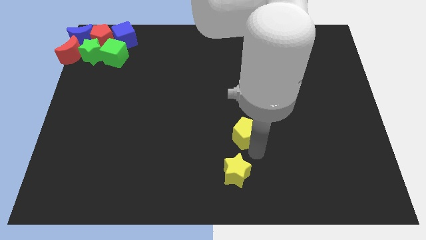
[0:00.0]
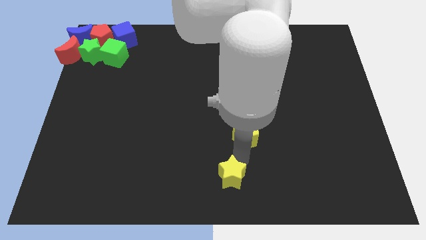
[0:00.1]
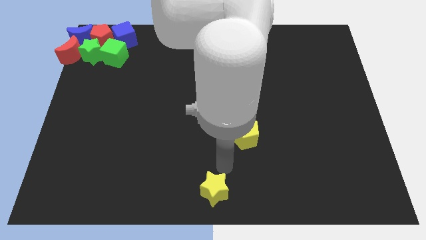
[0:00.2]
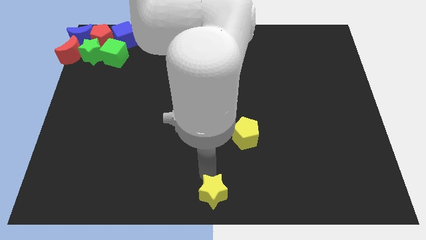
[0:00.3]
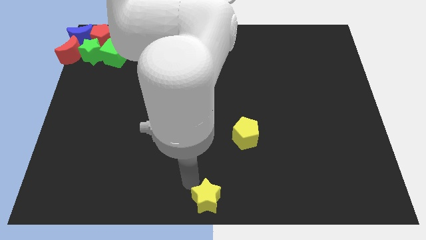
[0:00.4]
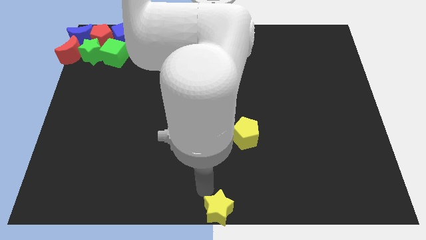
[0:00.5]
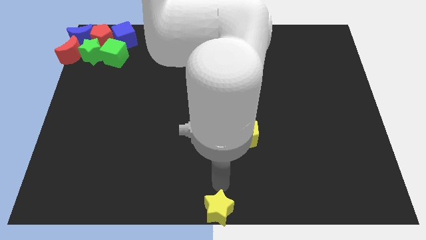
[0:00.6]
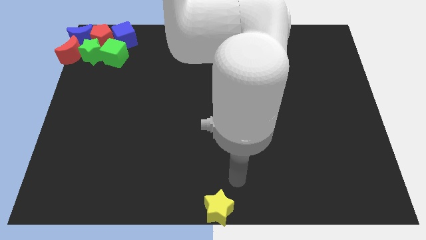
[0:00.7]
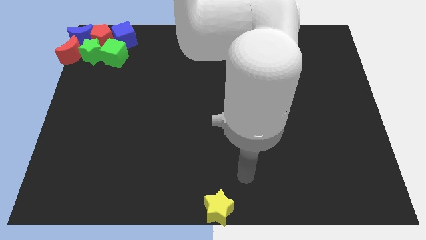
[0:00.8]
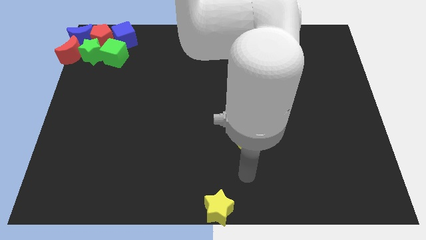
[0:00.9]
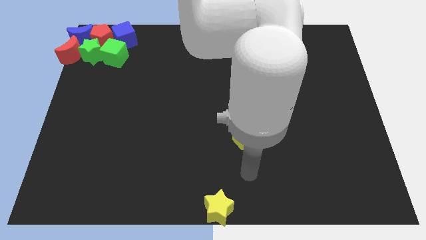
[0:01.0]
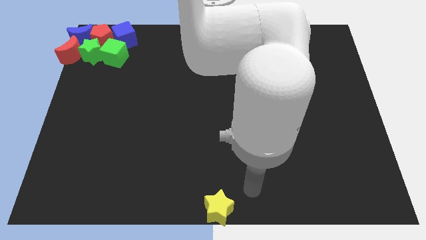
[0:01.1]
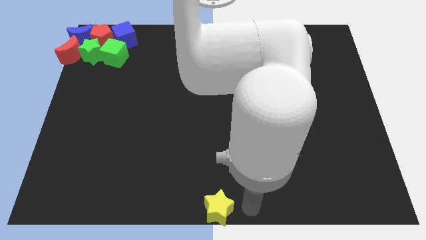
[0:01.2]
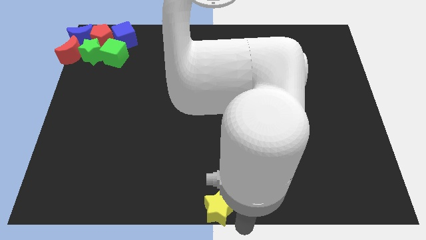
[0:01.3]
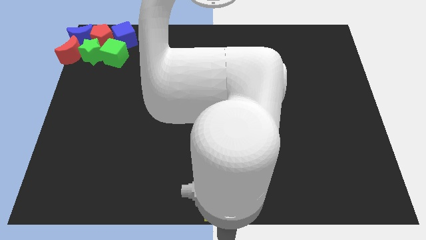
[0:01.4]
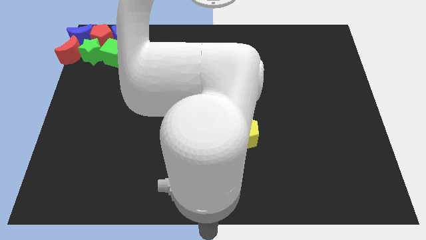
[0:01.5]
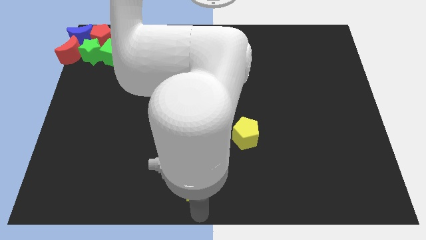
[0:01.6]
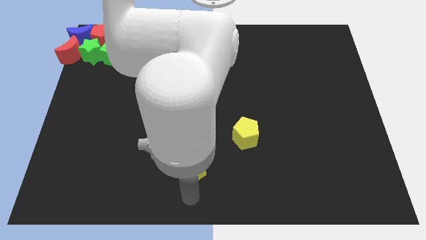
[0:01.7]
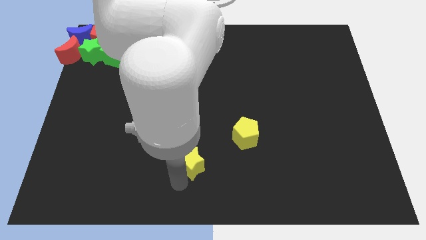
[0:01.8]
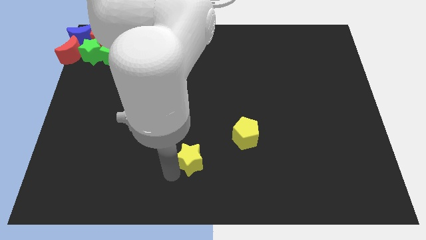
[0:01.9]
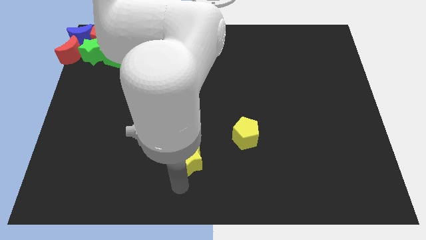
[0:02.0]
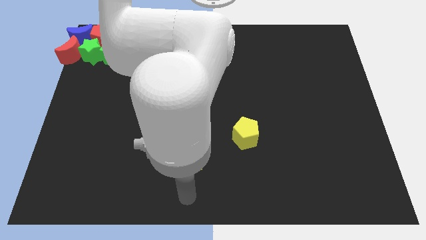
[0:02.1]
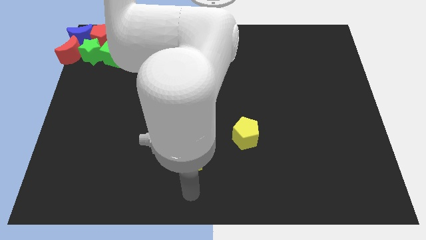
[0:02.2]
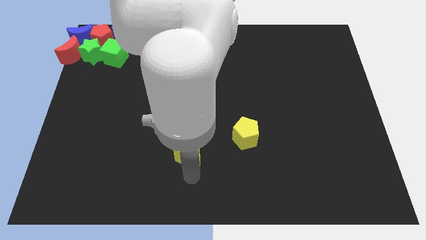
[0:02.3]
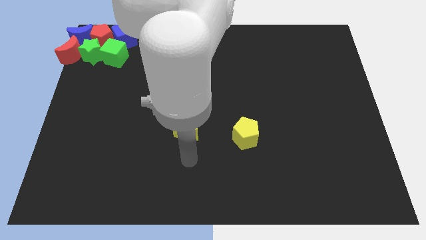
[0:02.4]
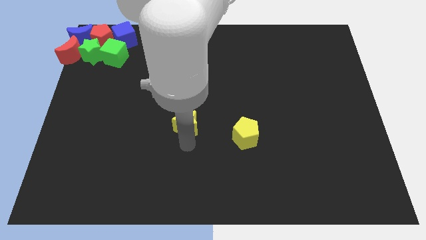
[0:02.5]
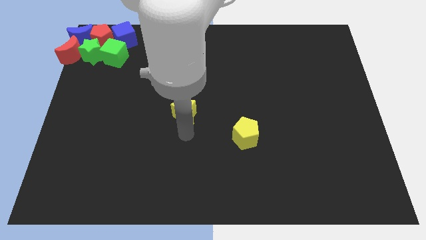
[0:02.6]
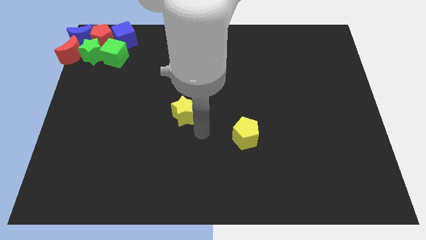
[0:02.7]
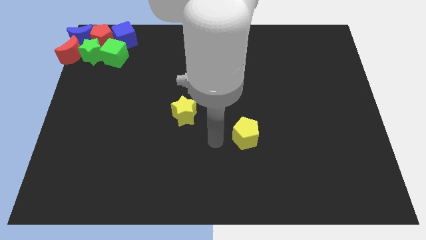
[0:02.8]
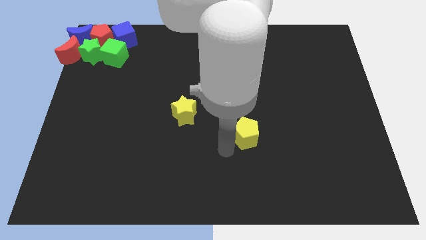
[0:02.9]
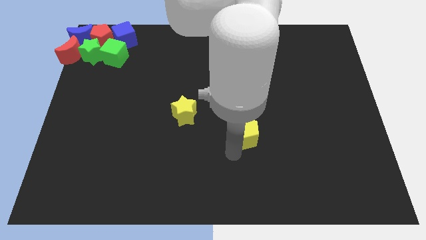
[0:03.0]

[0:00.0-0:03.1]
move the yellow star towards slightly up on the board

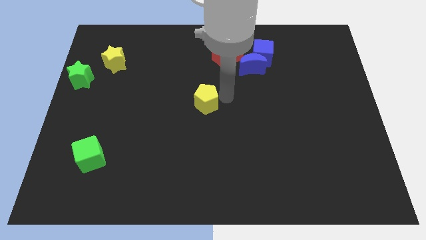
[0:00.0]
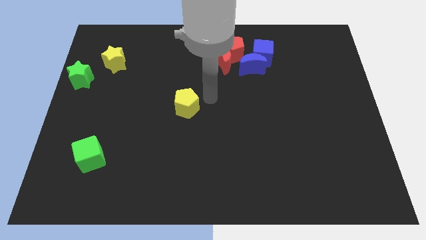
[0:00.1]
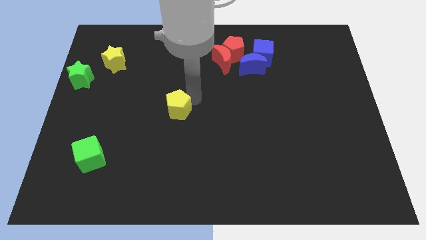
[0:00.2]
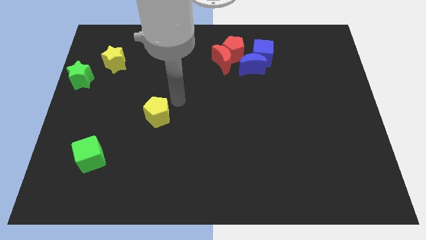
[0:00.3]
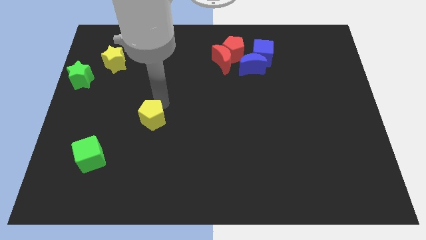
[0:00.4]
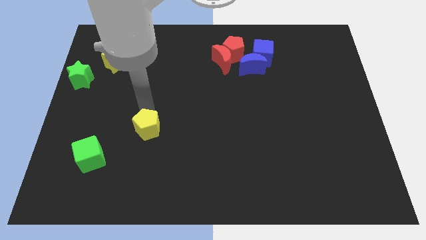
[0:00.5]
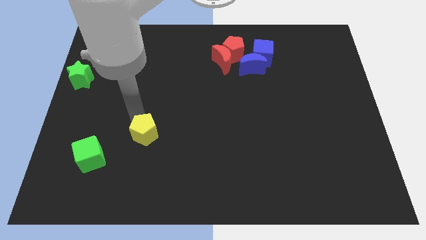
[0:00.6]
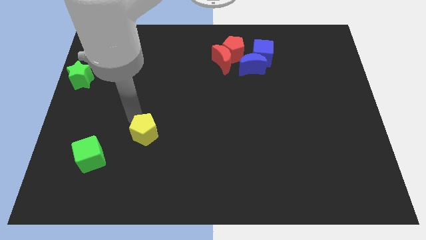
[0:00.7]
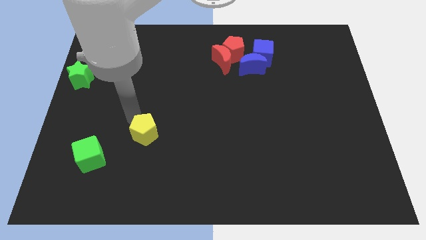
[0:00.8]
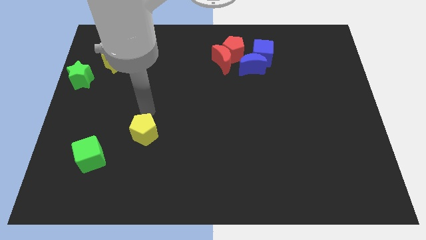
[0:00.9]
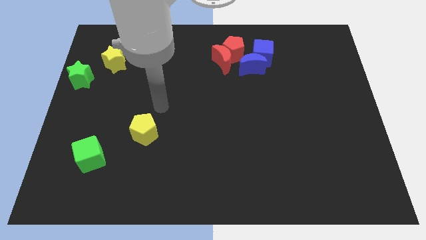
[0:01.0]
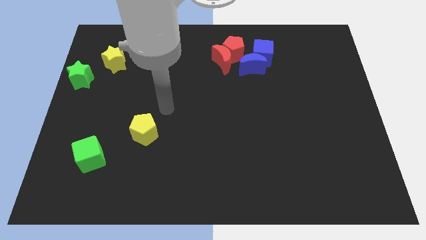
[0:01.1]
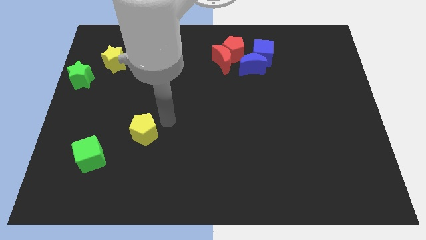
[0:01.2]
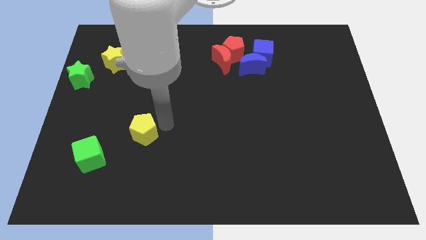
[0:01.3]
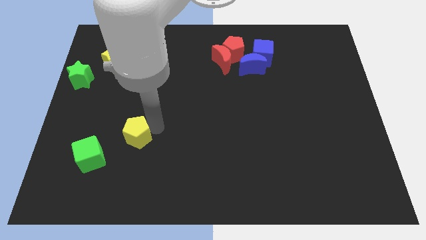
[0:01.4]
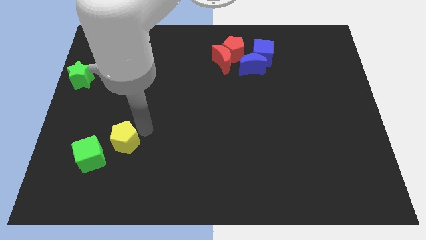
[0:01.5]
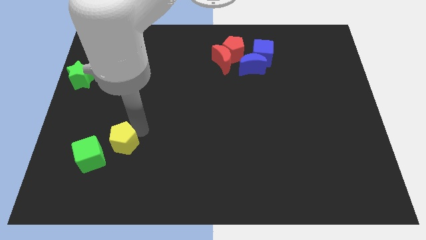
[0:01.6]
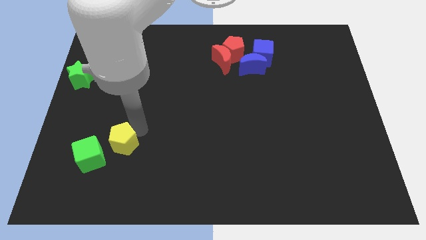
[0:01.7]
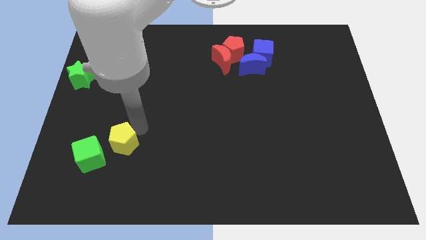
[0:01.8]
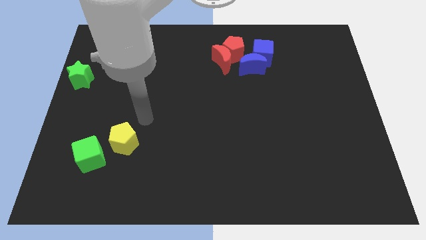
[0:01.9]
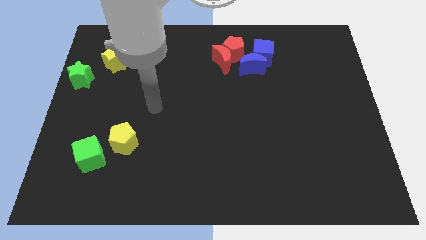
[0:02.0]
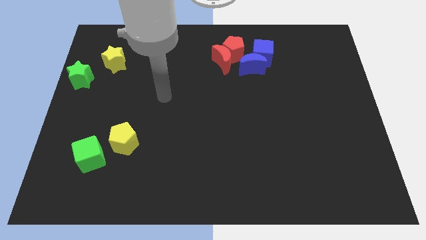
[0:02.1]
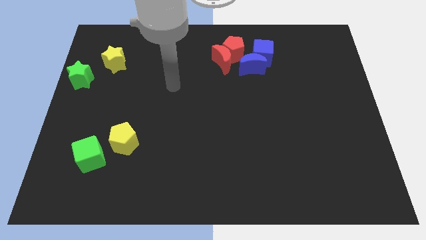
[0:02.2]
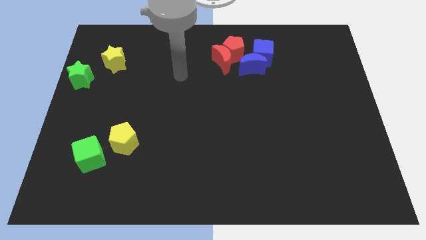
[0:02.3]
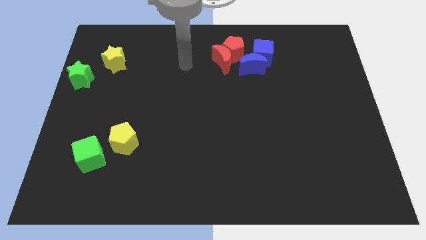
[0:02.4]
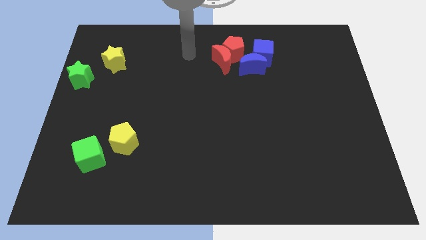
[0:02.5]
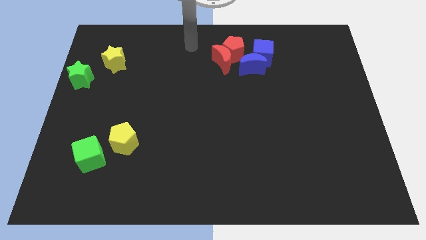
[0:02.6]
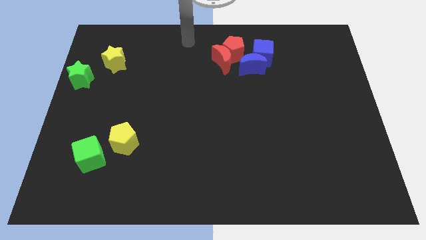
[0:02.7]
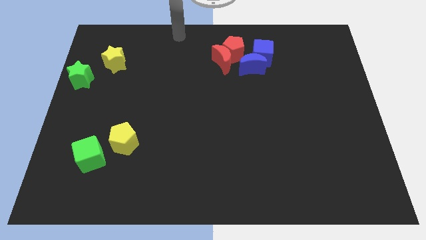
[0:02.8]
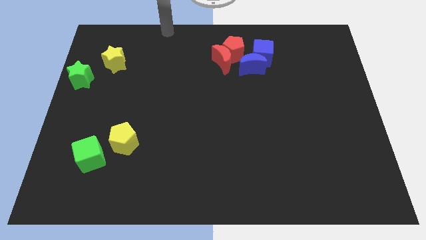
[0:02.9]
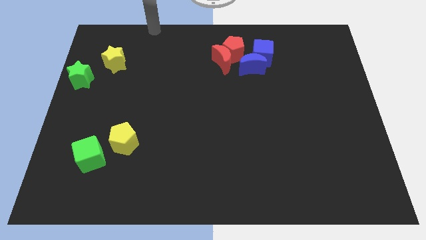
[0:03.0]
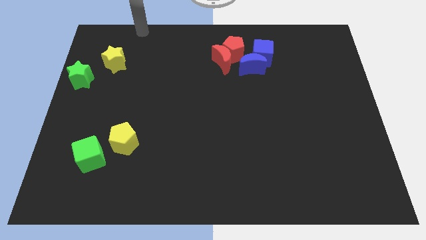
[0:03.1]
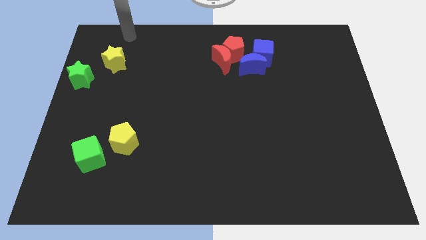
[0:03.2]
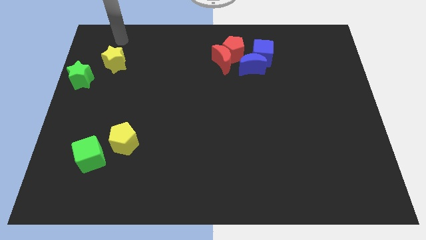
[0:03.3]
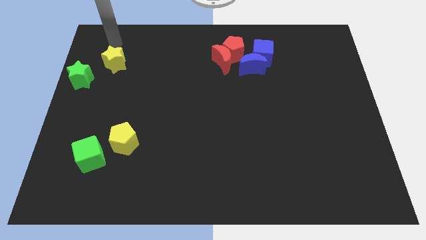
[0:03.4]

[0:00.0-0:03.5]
push the yellow pentagon diagonally top right of the green cube

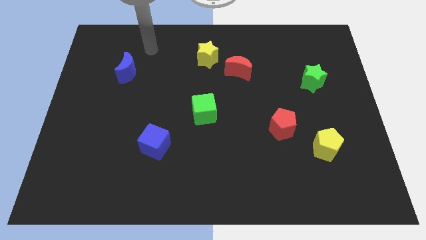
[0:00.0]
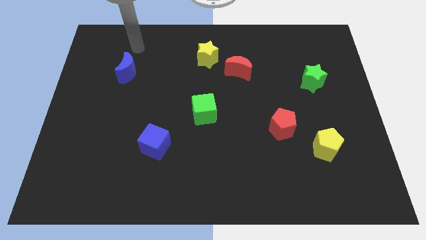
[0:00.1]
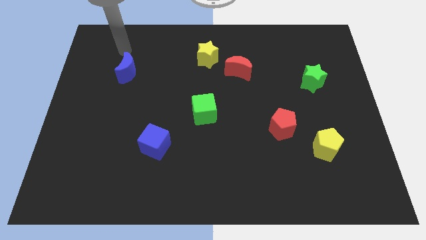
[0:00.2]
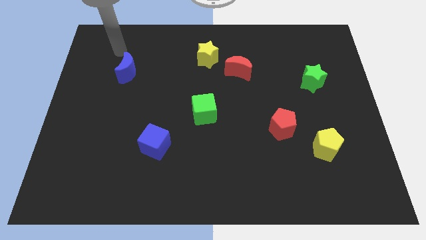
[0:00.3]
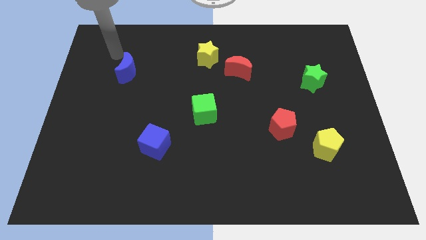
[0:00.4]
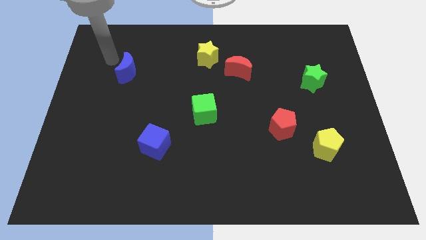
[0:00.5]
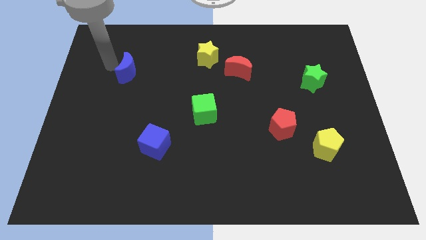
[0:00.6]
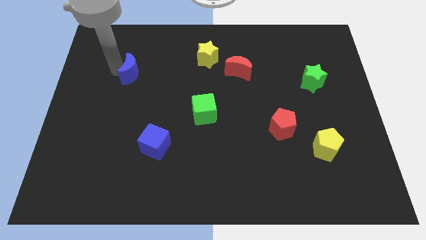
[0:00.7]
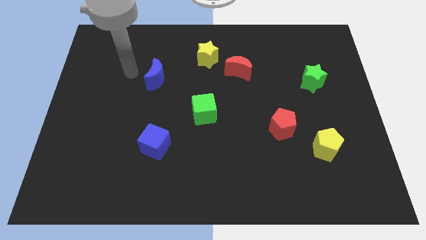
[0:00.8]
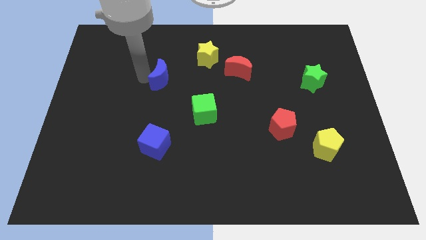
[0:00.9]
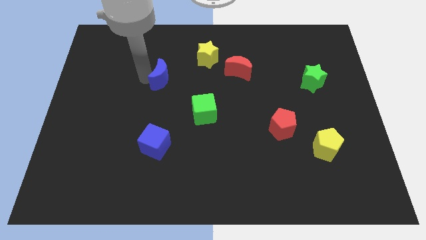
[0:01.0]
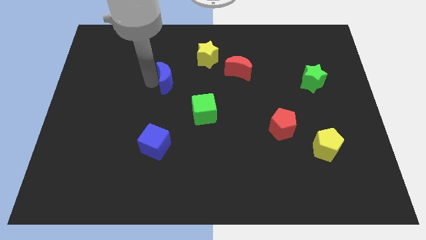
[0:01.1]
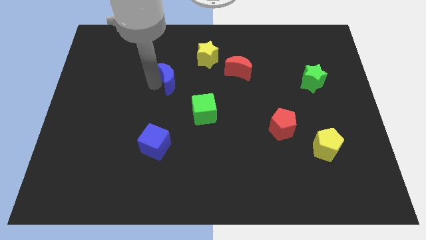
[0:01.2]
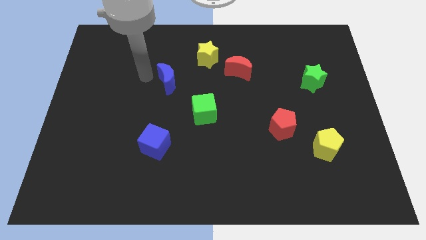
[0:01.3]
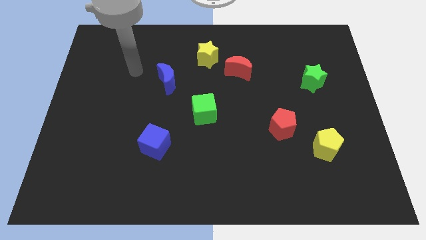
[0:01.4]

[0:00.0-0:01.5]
push the blue semicircle to the right

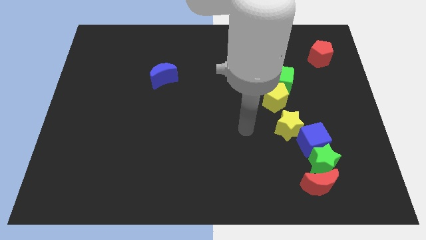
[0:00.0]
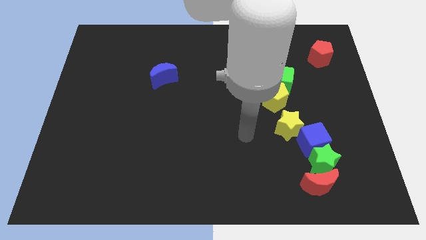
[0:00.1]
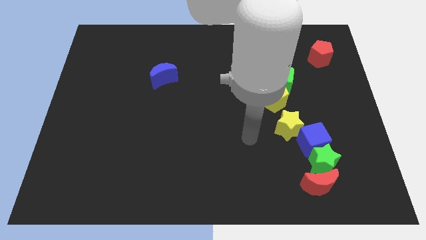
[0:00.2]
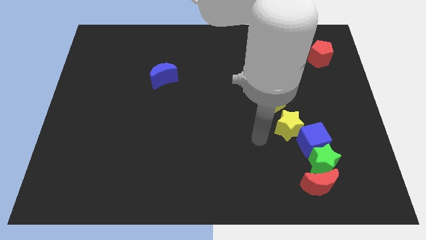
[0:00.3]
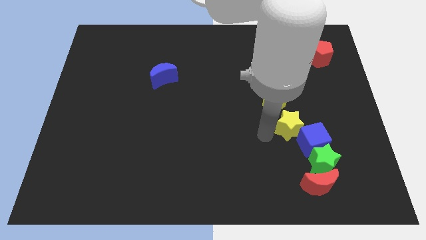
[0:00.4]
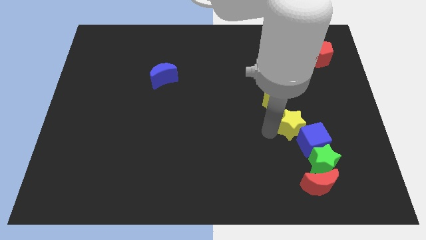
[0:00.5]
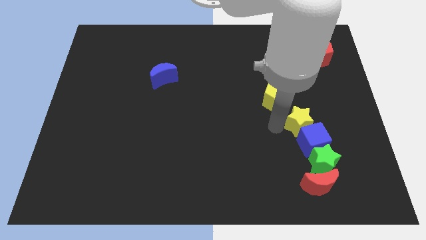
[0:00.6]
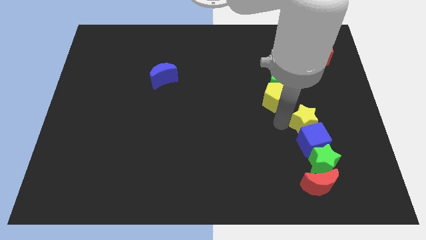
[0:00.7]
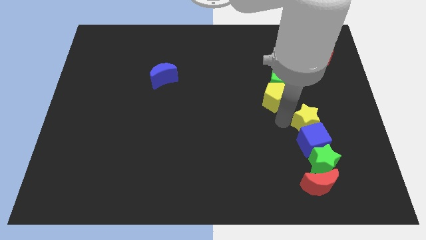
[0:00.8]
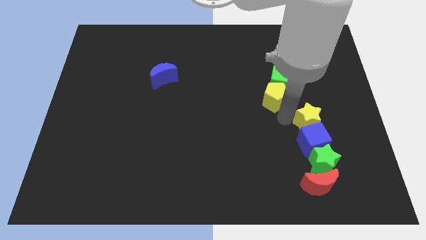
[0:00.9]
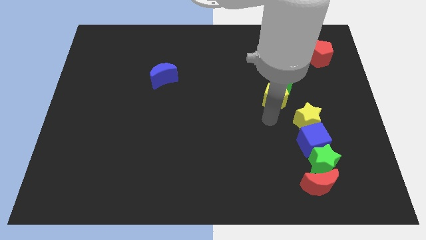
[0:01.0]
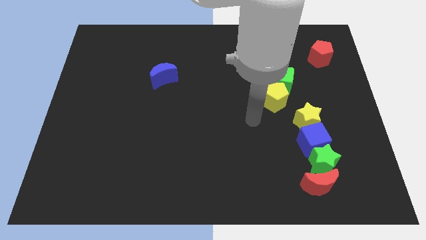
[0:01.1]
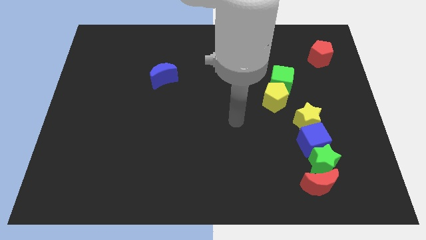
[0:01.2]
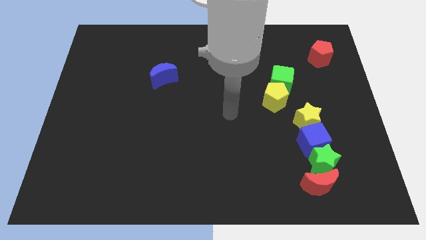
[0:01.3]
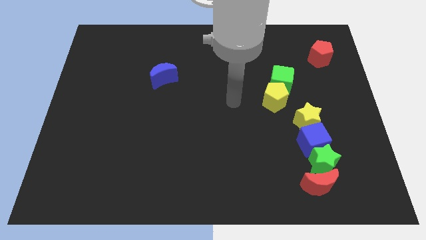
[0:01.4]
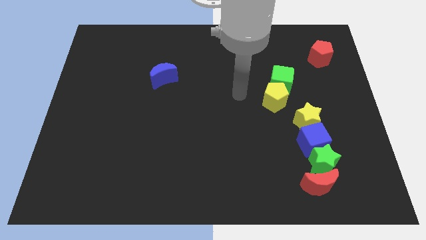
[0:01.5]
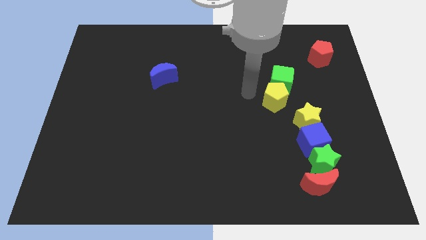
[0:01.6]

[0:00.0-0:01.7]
put the yellow star above blue cube
